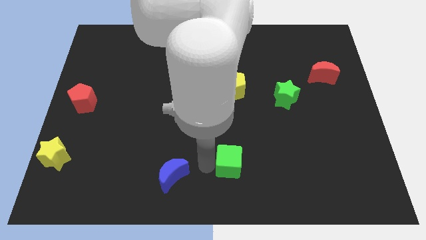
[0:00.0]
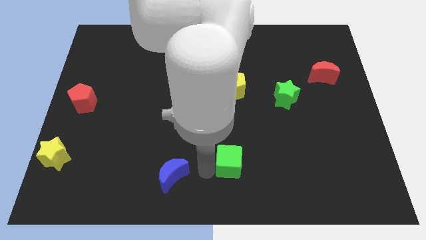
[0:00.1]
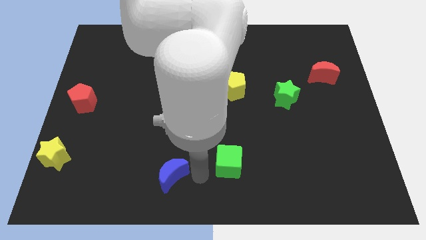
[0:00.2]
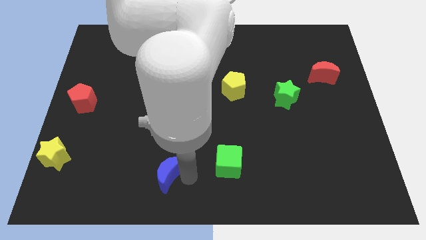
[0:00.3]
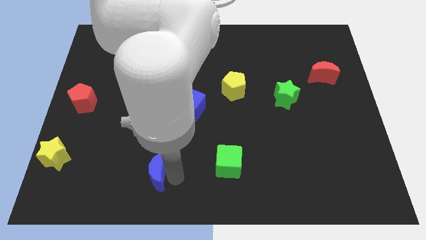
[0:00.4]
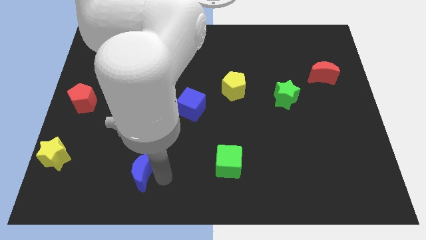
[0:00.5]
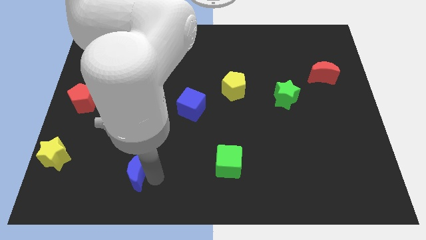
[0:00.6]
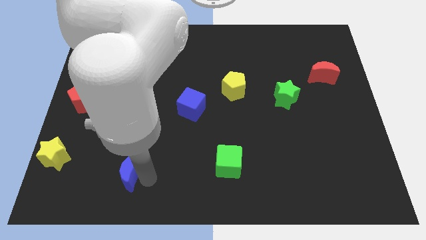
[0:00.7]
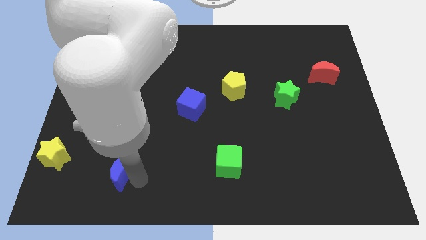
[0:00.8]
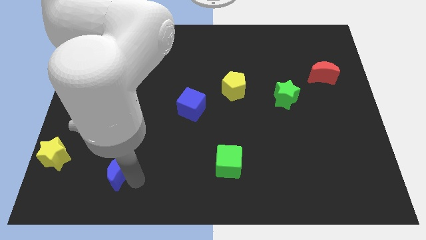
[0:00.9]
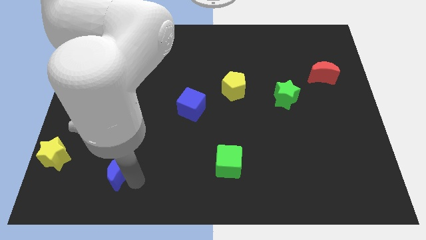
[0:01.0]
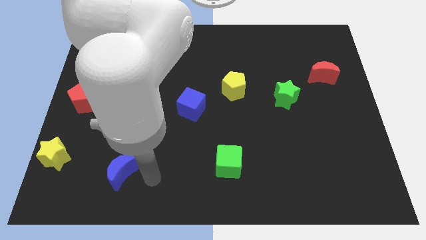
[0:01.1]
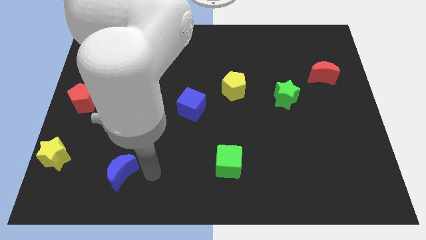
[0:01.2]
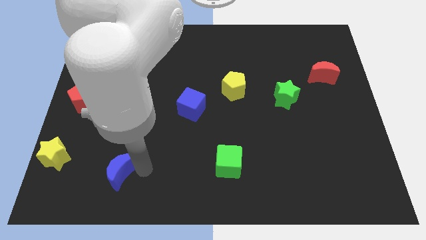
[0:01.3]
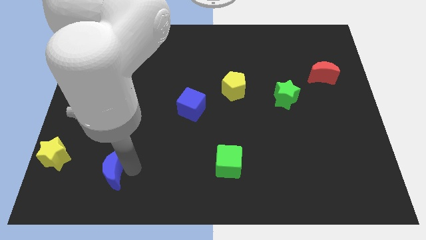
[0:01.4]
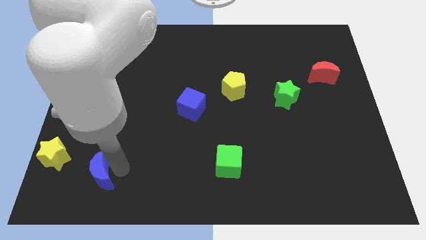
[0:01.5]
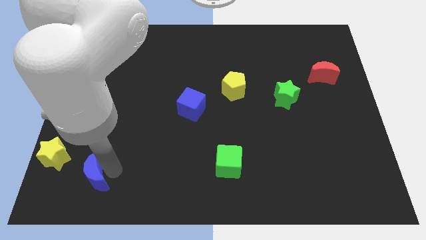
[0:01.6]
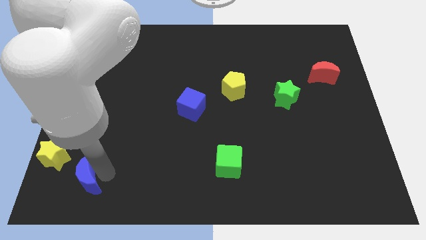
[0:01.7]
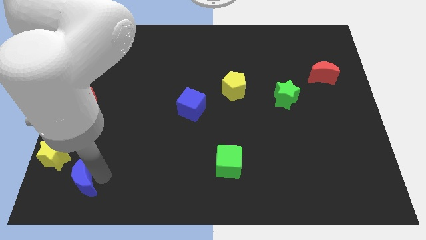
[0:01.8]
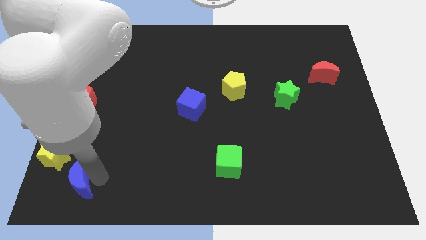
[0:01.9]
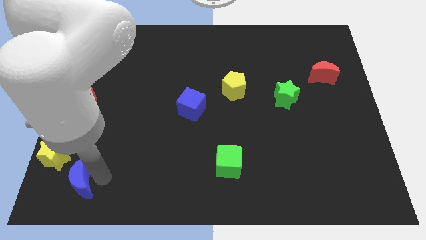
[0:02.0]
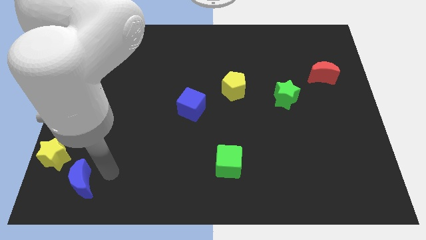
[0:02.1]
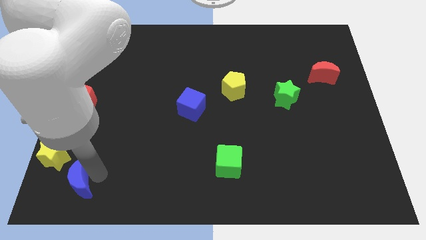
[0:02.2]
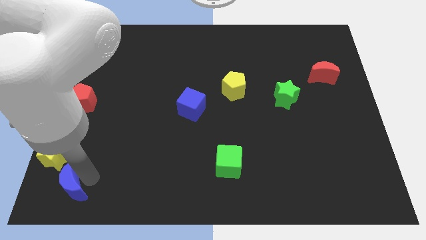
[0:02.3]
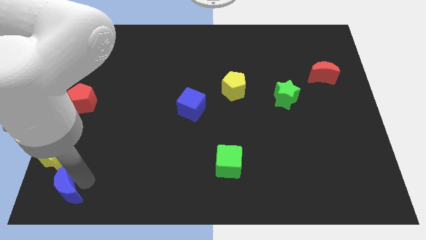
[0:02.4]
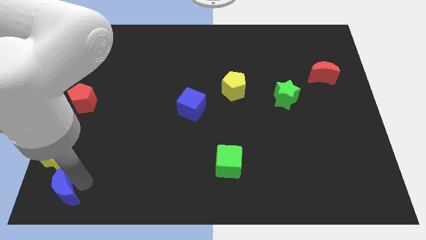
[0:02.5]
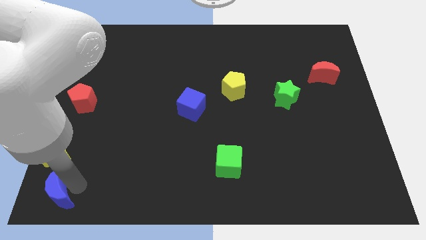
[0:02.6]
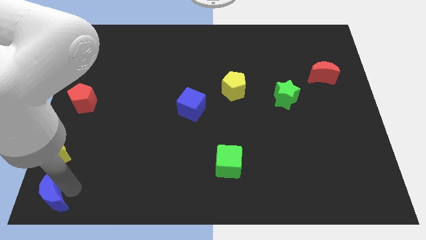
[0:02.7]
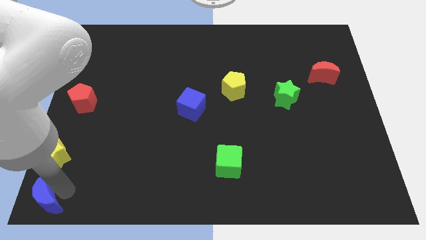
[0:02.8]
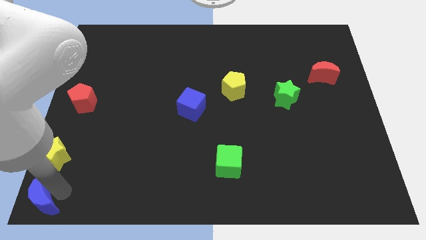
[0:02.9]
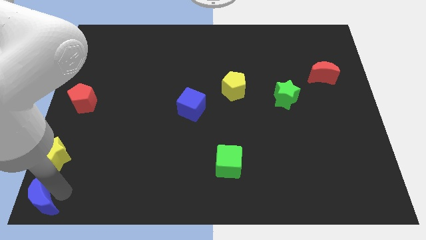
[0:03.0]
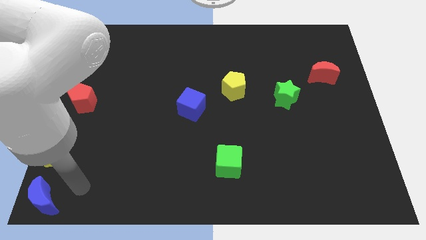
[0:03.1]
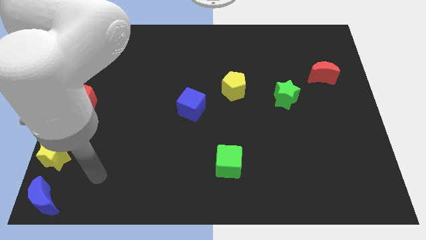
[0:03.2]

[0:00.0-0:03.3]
push the blue moon towards the bottom left side of the board

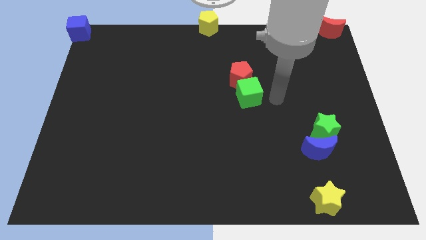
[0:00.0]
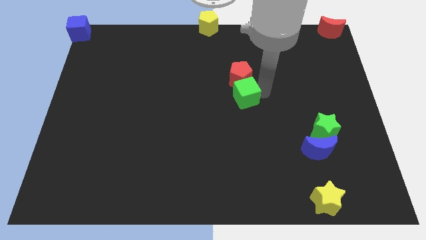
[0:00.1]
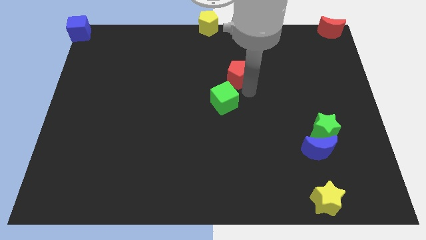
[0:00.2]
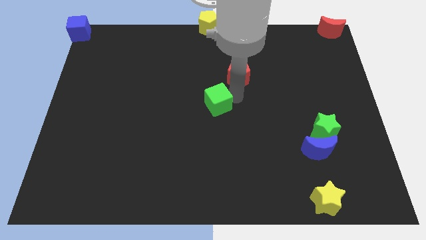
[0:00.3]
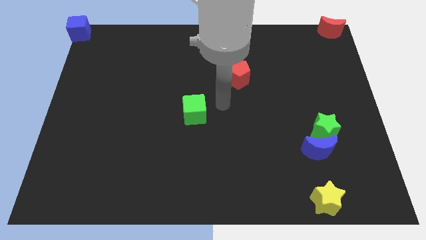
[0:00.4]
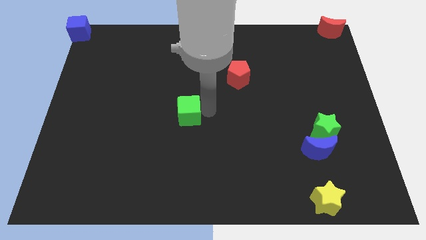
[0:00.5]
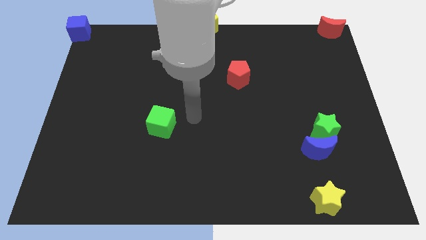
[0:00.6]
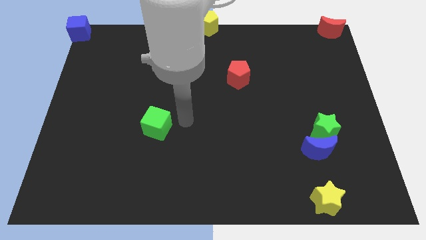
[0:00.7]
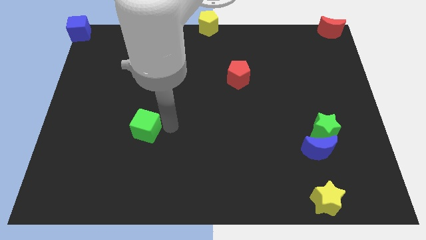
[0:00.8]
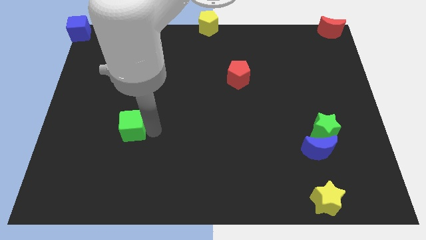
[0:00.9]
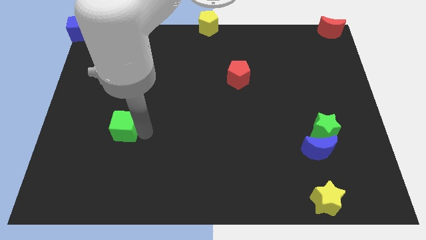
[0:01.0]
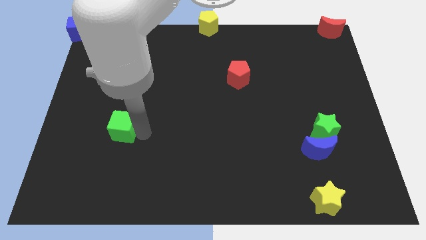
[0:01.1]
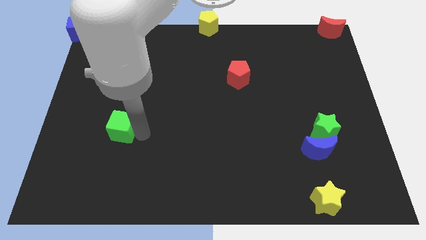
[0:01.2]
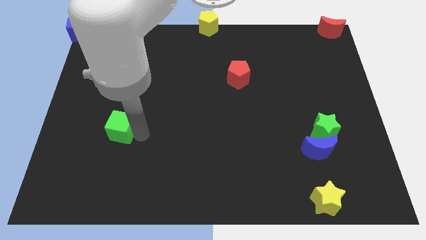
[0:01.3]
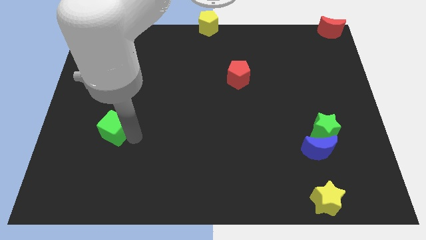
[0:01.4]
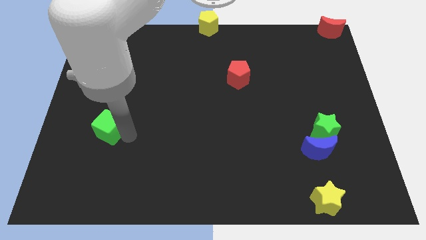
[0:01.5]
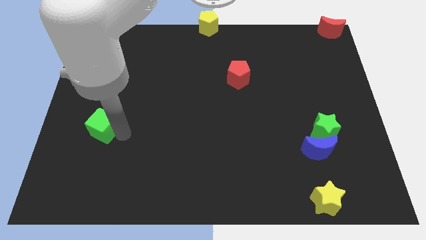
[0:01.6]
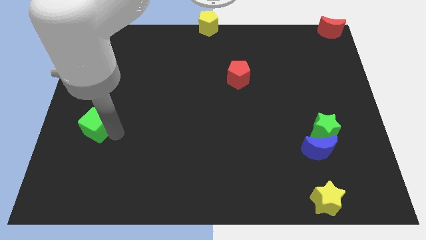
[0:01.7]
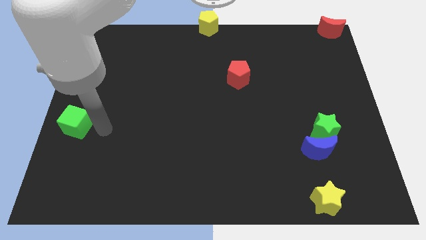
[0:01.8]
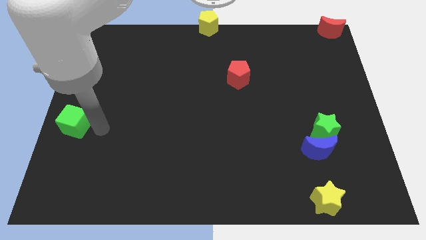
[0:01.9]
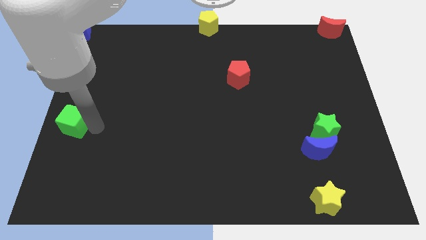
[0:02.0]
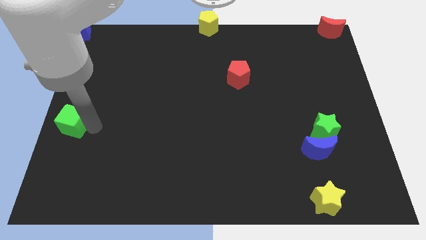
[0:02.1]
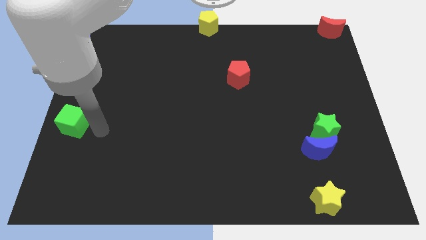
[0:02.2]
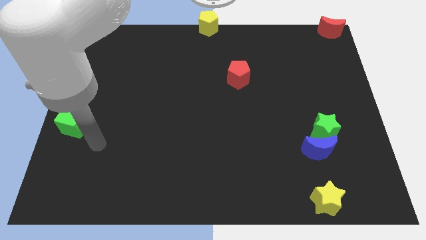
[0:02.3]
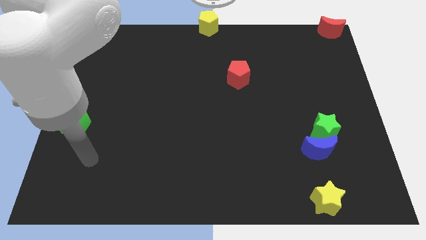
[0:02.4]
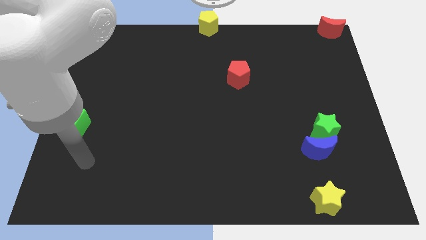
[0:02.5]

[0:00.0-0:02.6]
place the green cube on the middle left

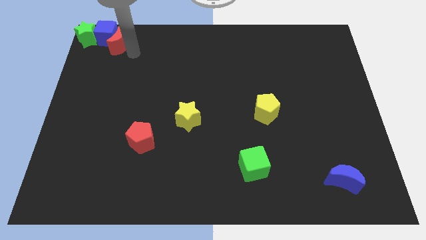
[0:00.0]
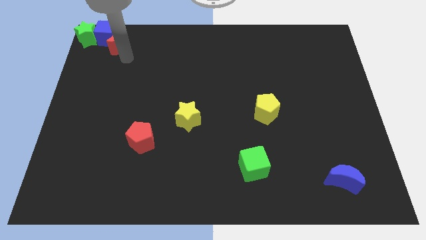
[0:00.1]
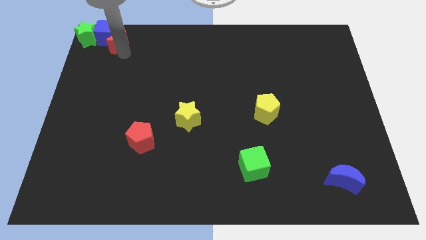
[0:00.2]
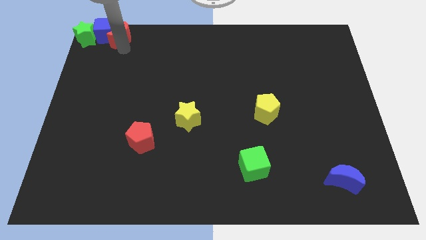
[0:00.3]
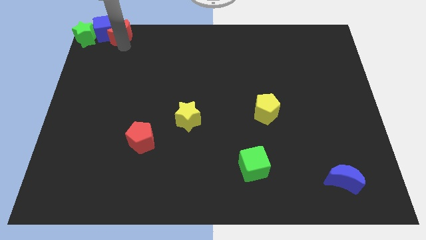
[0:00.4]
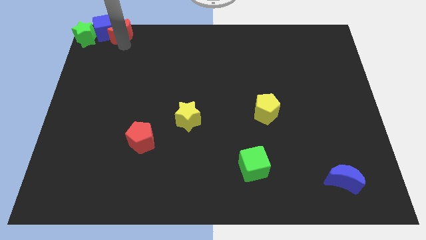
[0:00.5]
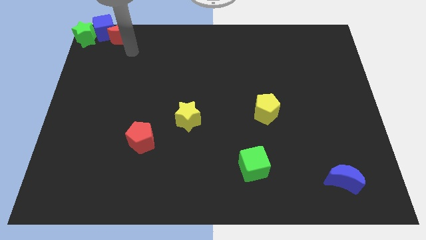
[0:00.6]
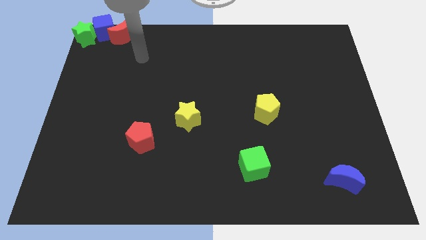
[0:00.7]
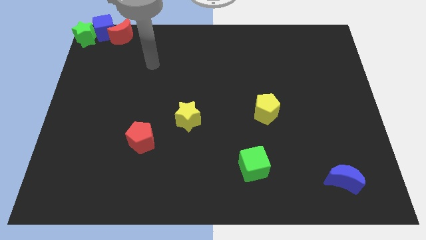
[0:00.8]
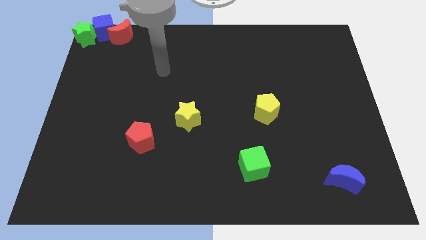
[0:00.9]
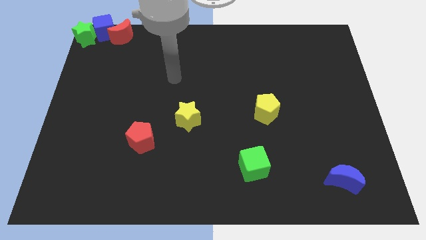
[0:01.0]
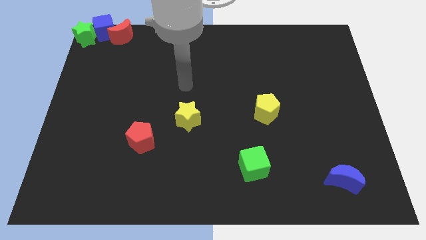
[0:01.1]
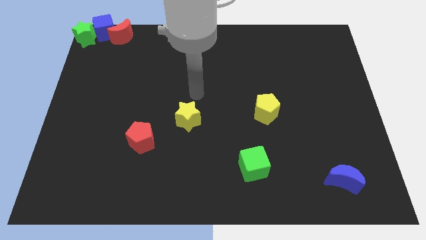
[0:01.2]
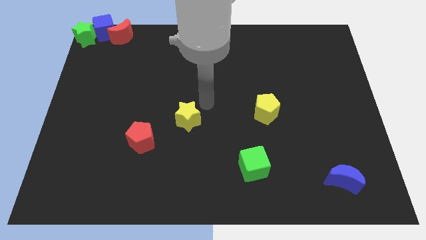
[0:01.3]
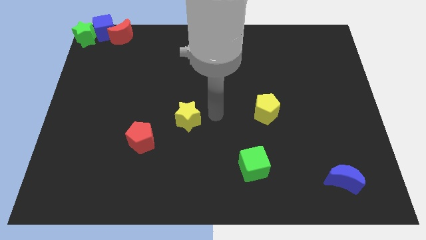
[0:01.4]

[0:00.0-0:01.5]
move your arm away from red moon

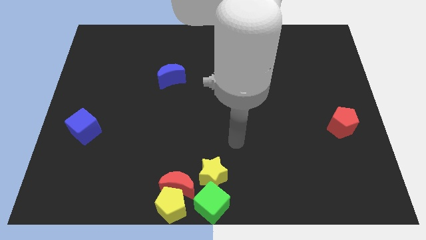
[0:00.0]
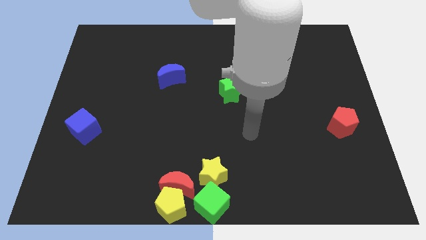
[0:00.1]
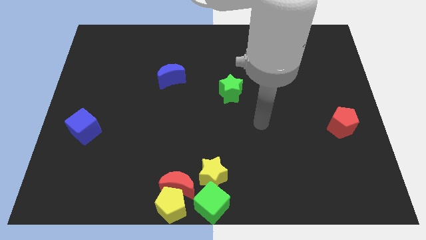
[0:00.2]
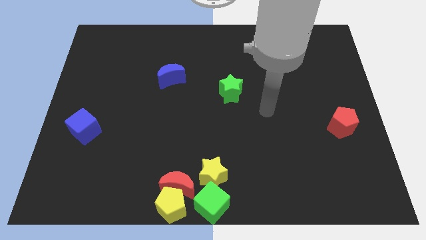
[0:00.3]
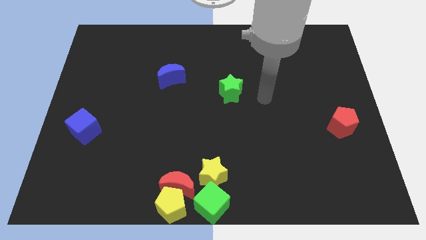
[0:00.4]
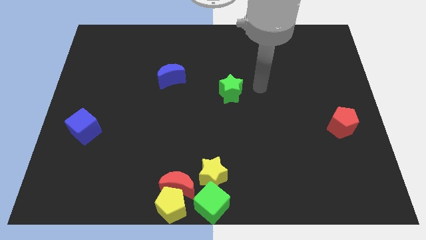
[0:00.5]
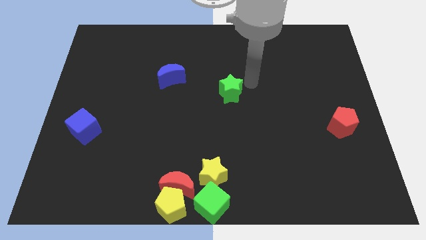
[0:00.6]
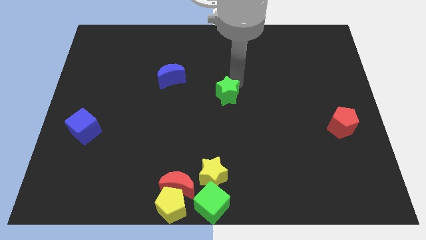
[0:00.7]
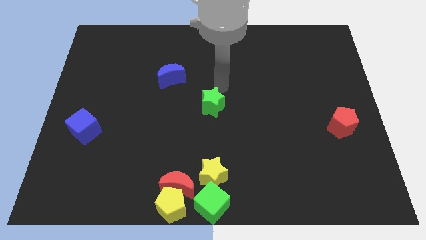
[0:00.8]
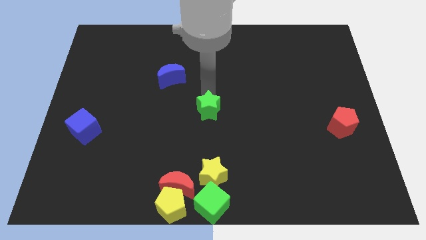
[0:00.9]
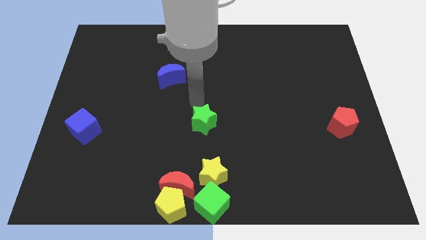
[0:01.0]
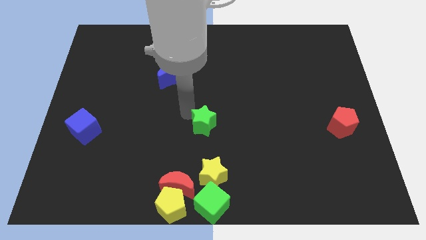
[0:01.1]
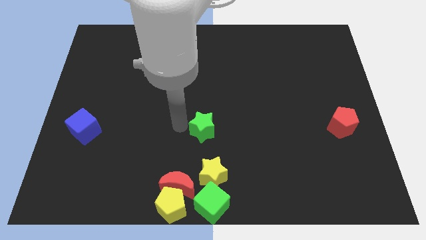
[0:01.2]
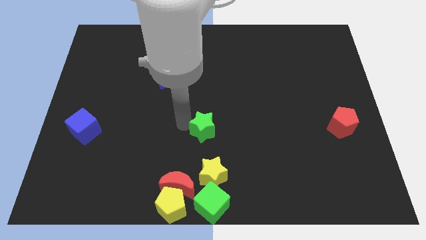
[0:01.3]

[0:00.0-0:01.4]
drag the green star towards group of blocks

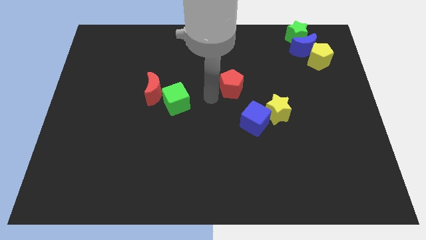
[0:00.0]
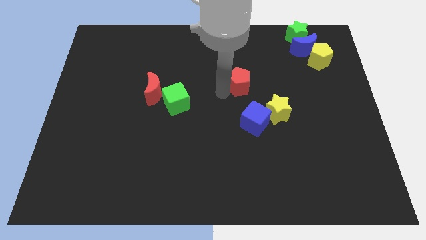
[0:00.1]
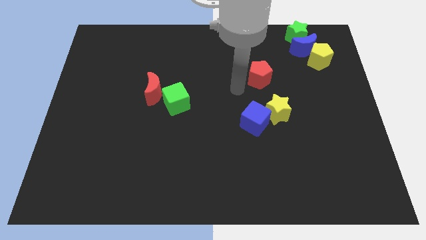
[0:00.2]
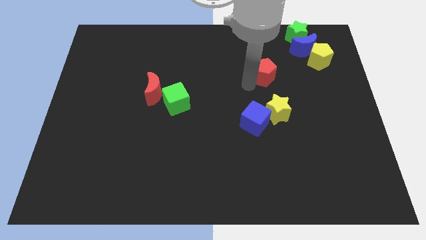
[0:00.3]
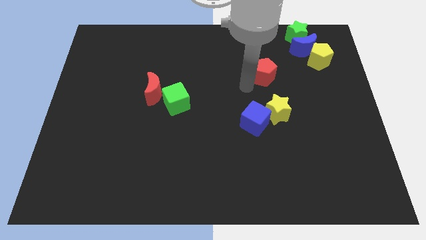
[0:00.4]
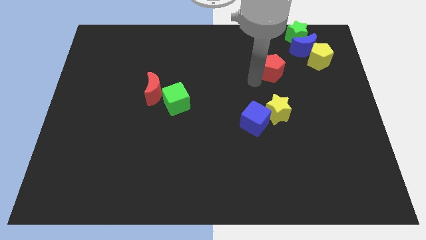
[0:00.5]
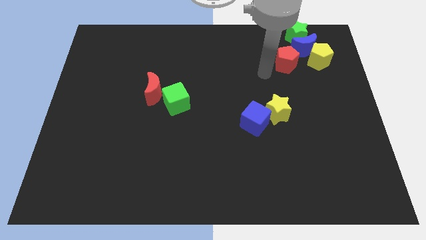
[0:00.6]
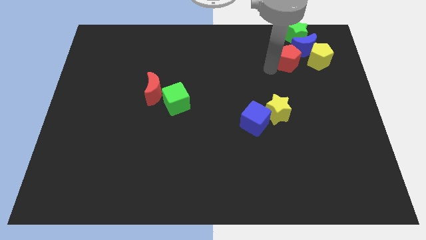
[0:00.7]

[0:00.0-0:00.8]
push the red pentagon bottom left to the blue crescent
